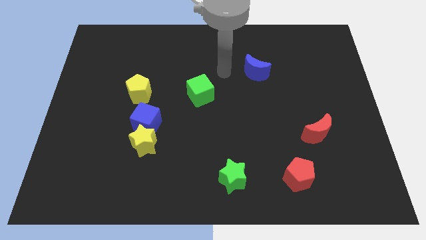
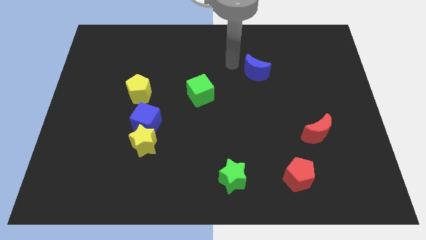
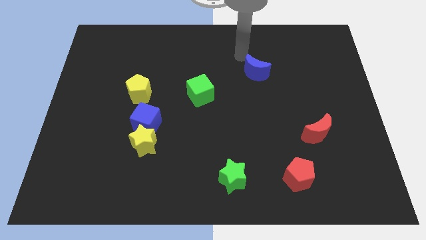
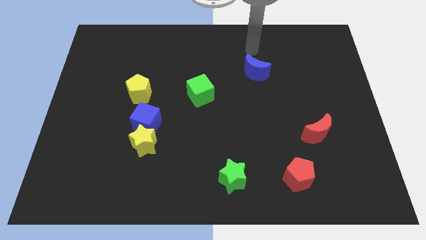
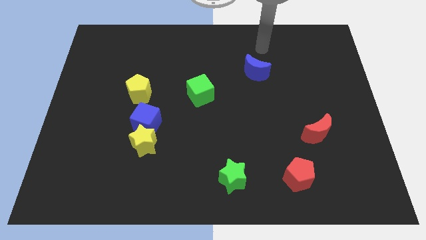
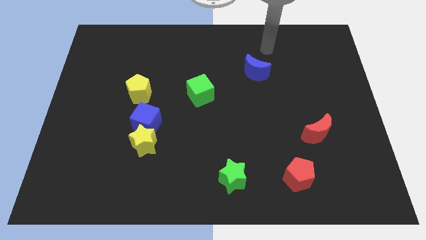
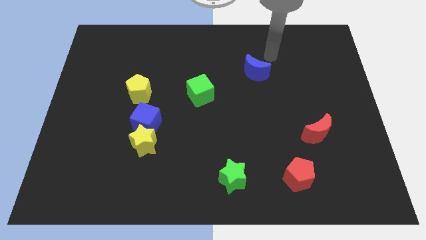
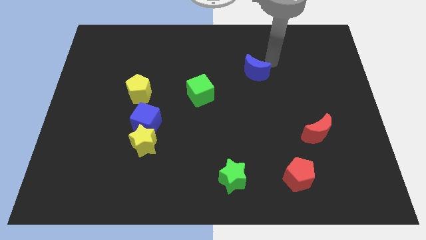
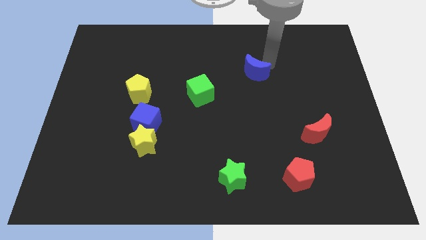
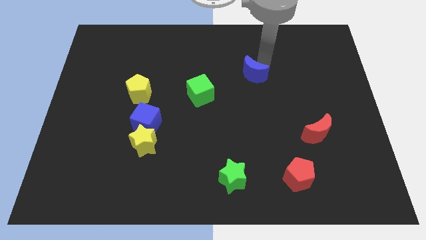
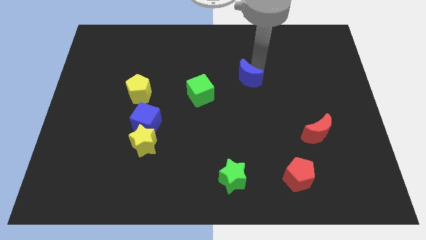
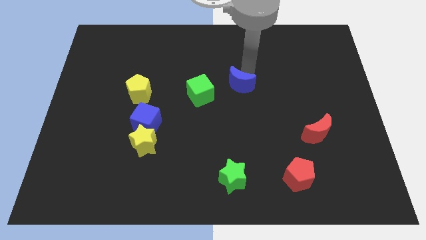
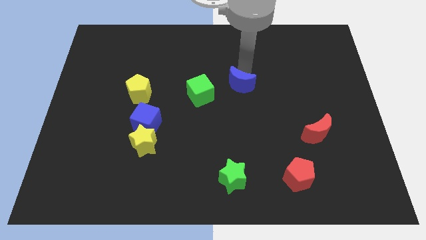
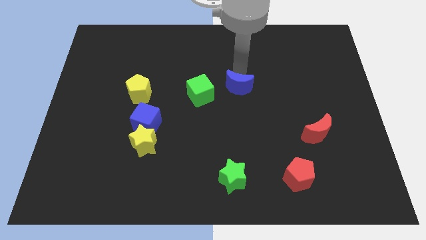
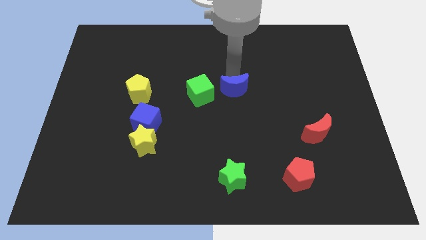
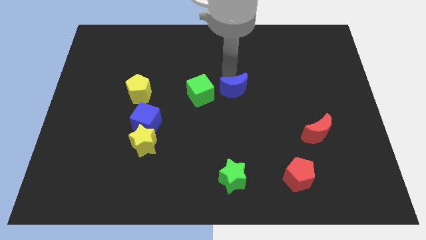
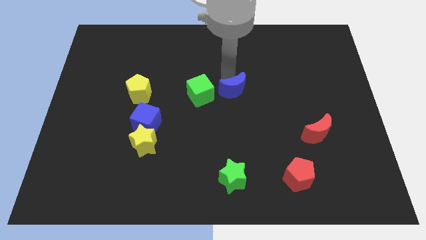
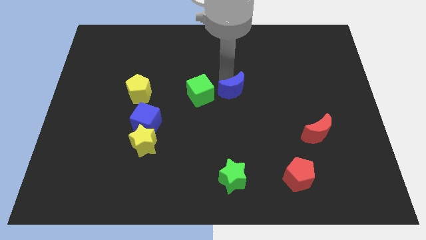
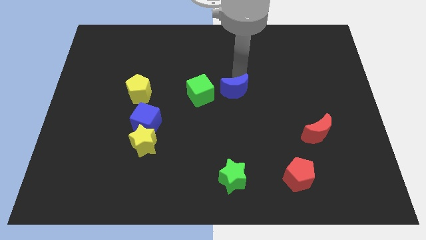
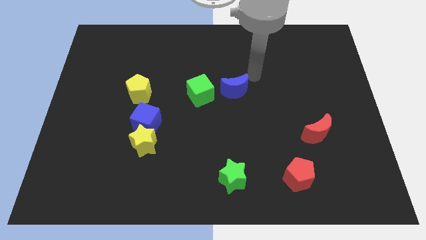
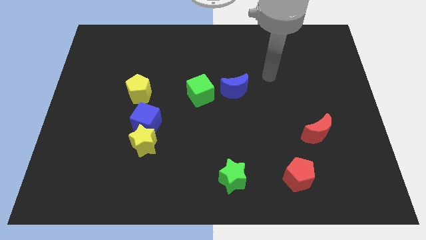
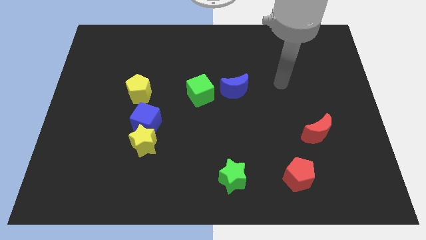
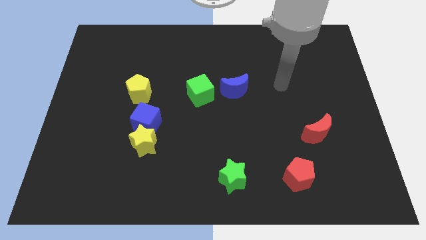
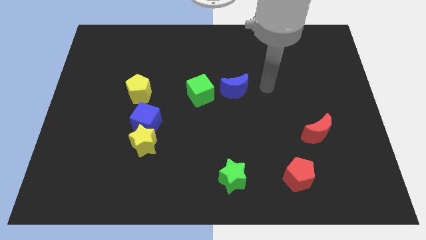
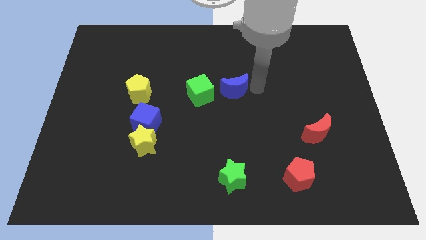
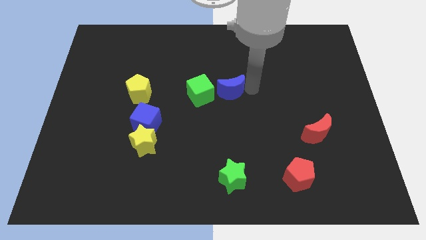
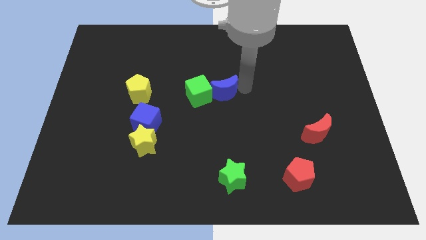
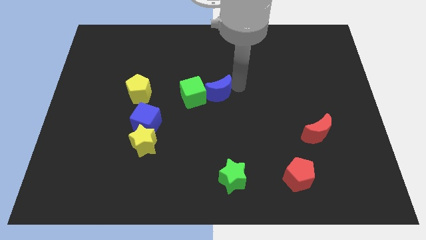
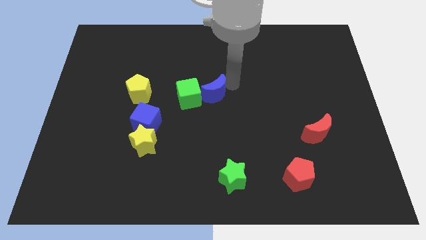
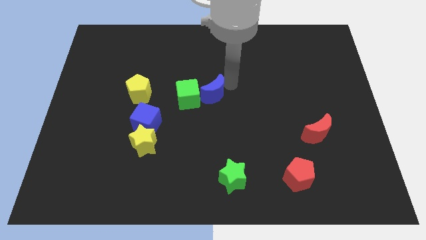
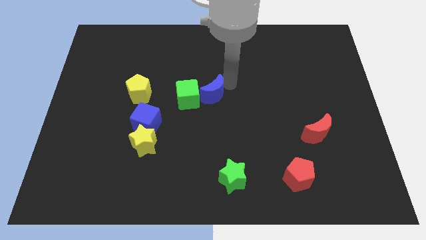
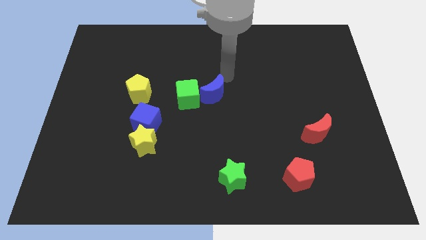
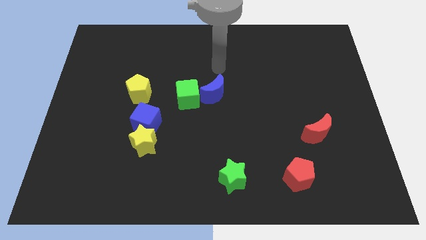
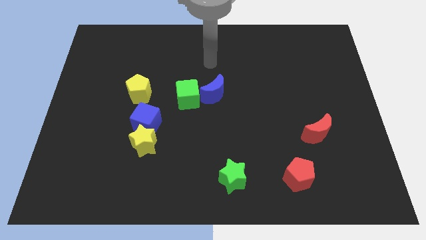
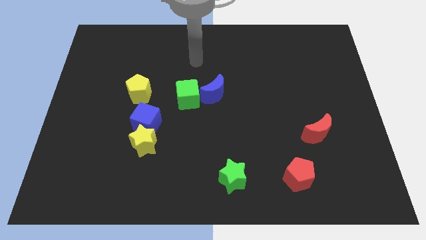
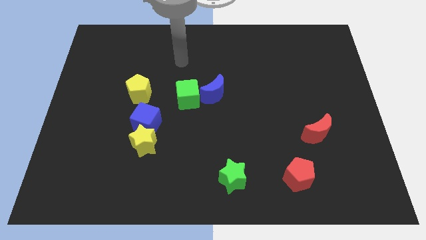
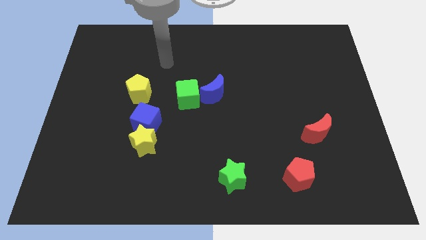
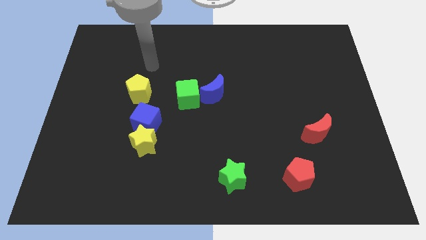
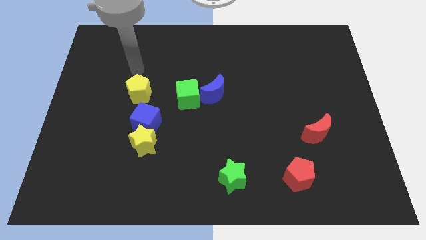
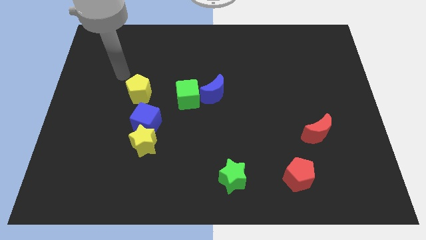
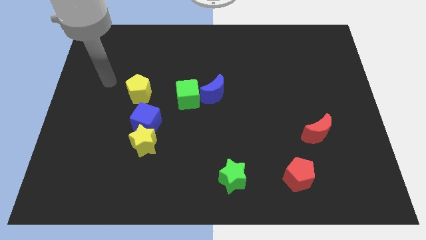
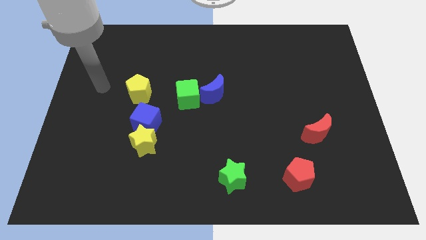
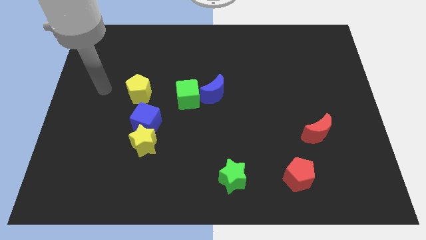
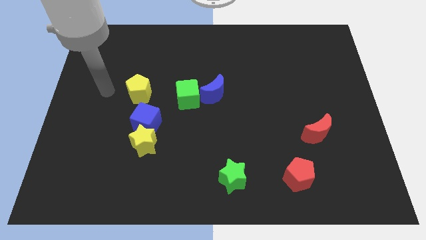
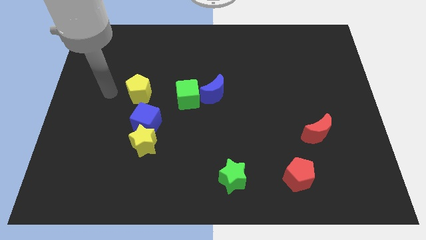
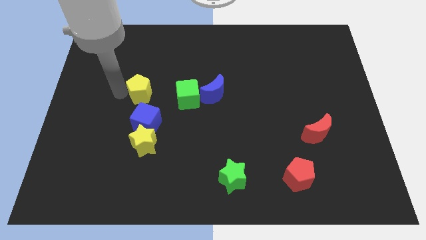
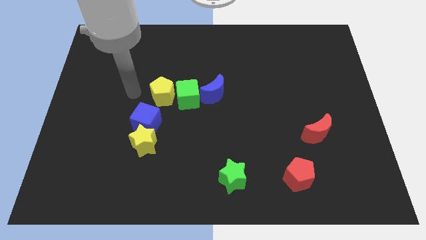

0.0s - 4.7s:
slide the blue cube into the green cube

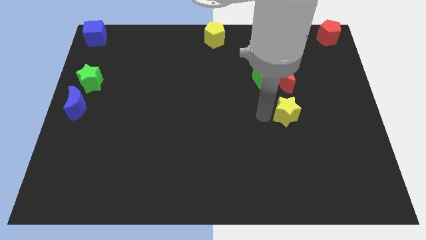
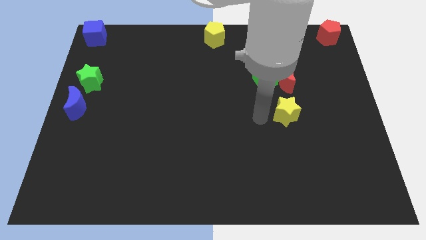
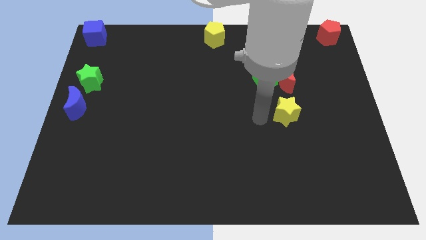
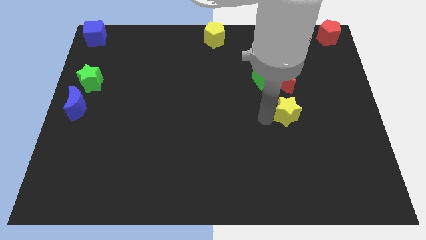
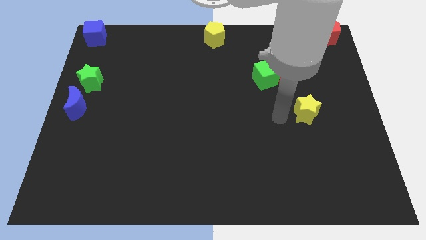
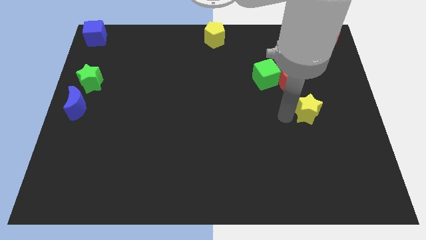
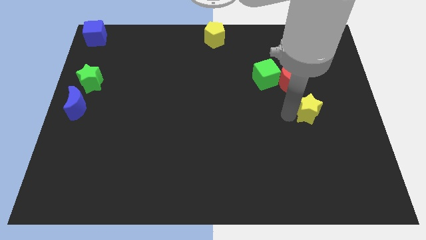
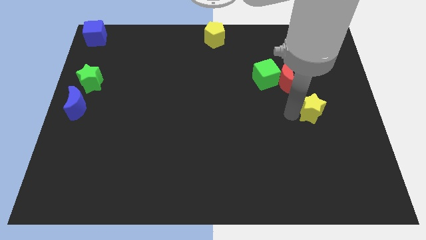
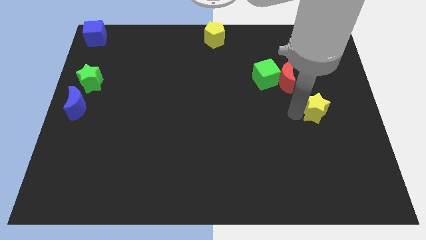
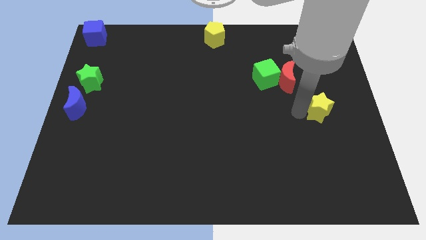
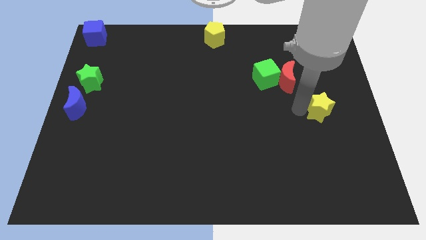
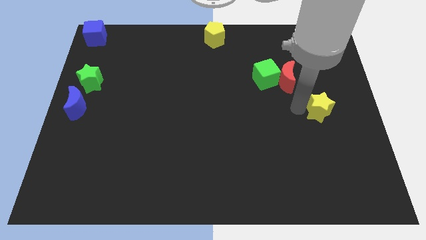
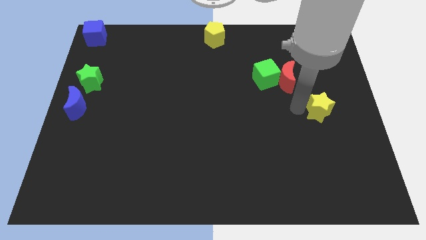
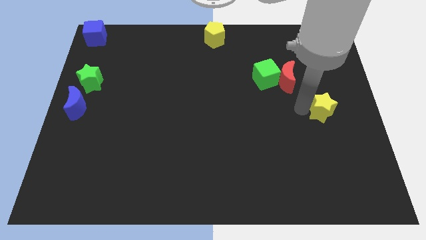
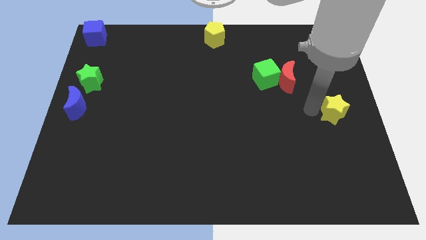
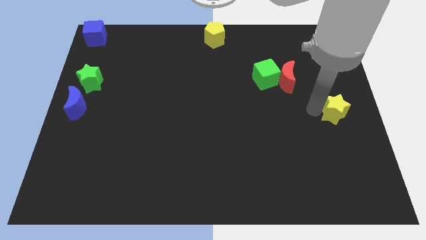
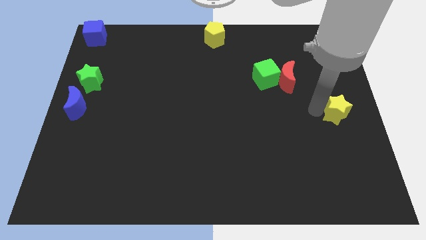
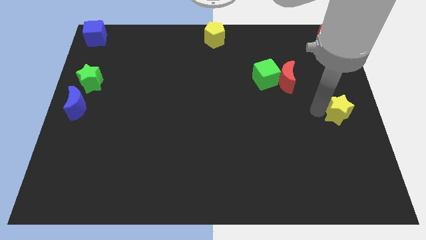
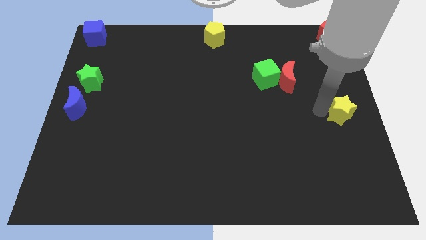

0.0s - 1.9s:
move the yellow star to the right center of the board

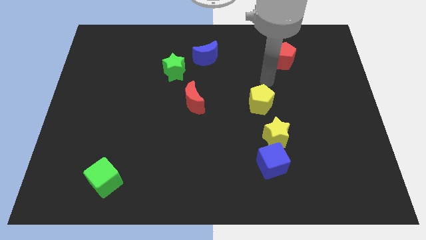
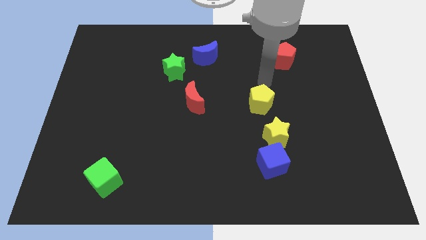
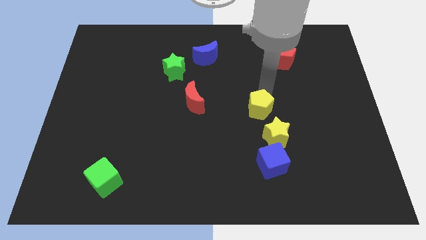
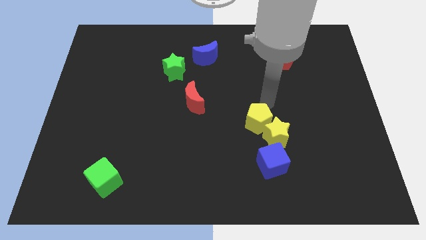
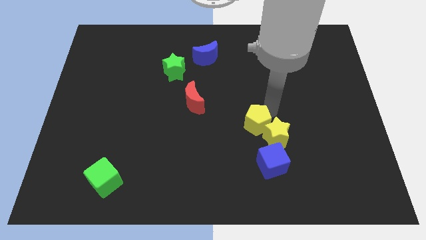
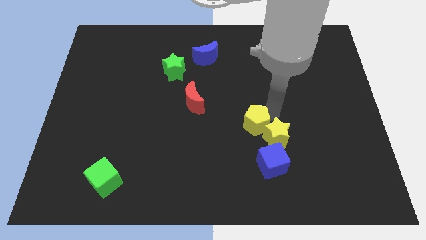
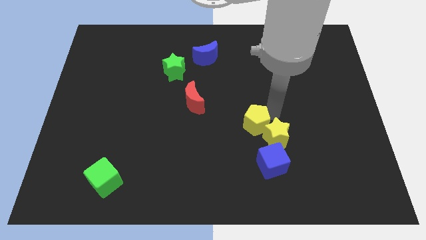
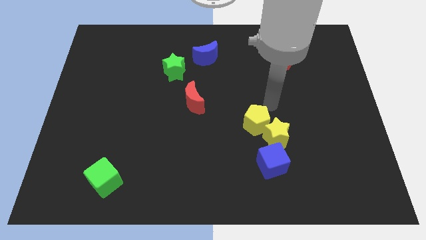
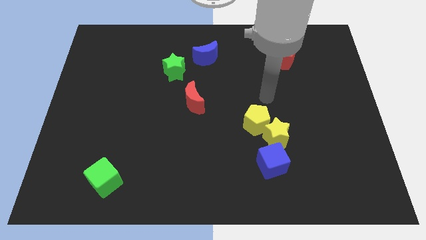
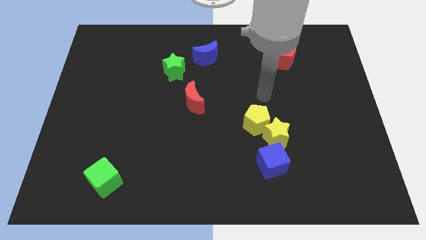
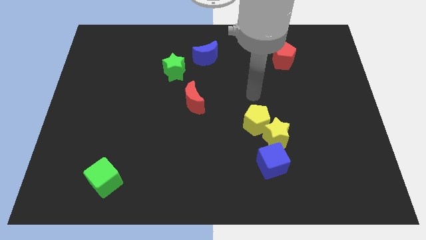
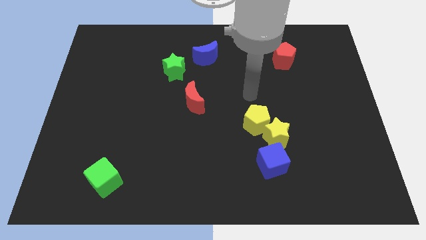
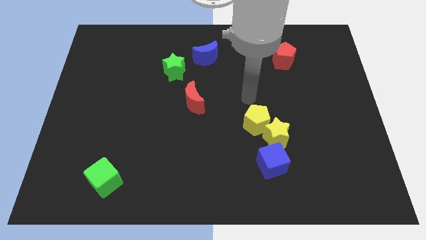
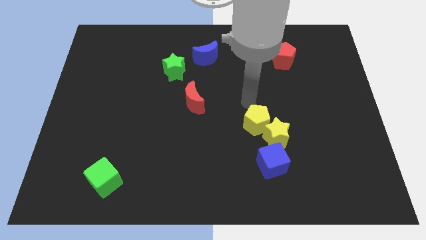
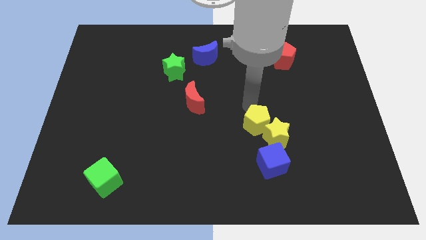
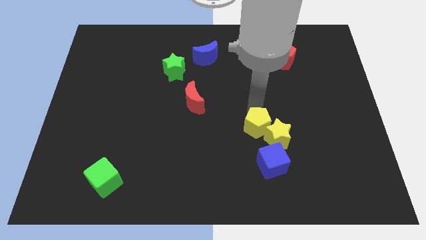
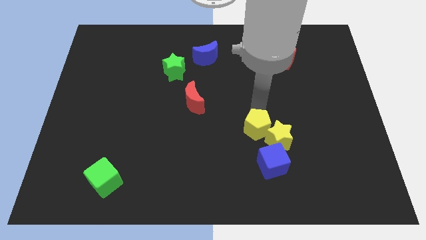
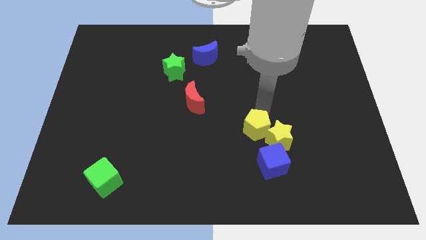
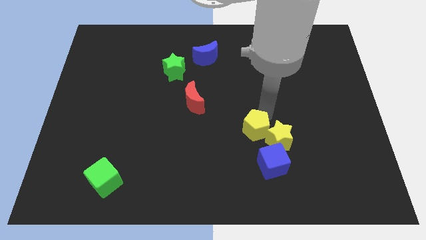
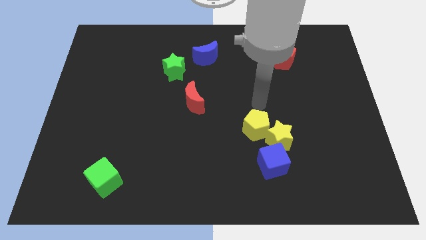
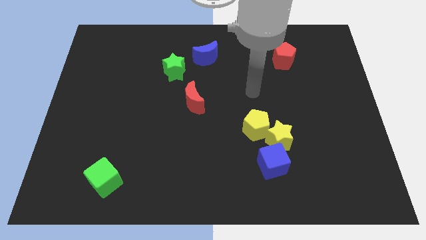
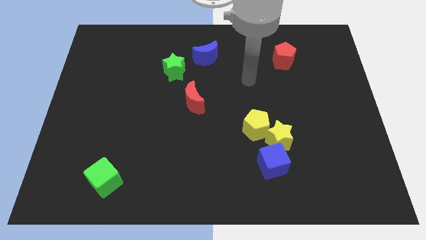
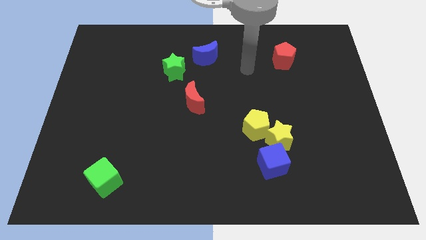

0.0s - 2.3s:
move the yellow pentagon into the yellow star

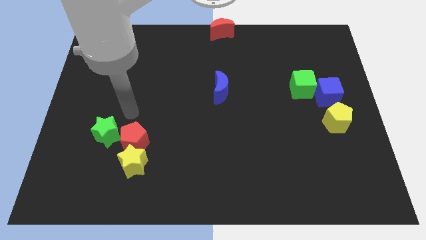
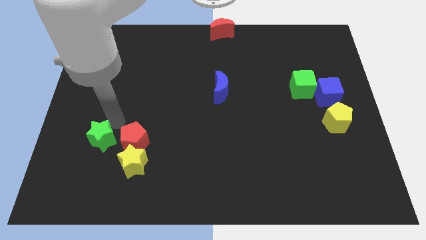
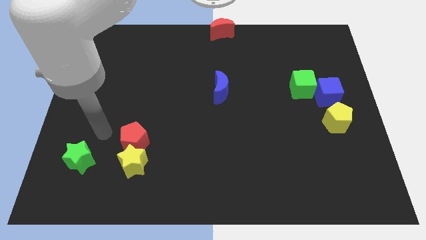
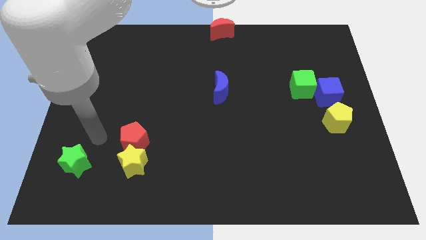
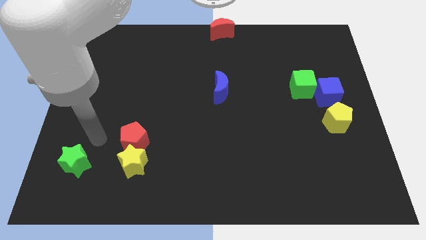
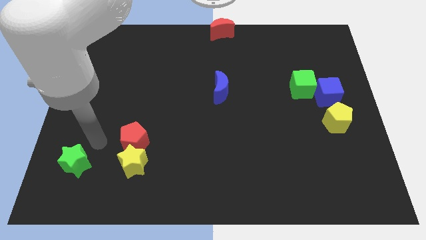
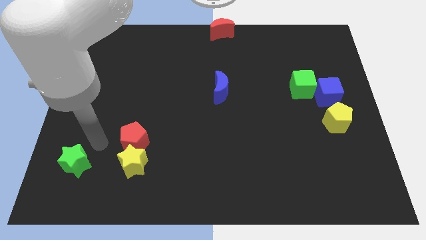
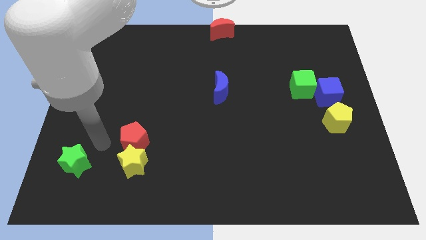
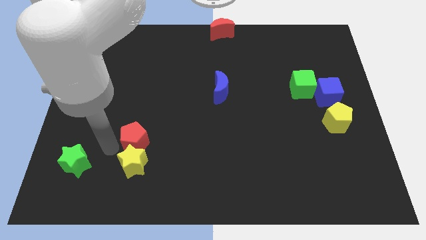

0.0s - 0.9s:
place the green star left to the yellow star
